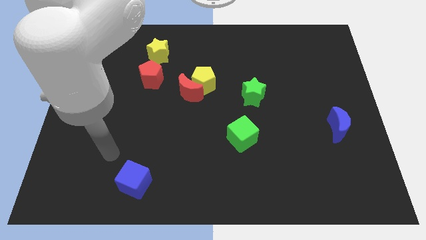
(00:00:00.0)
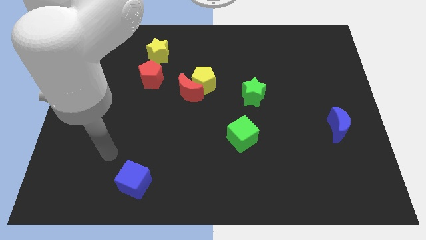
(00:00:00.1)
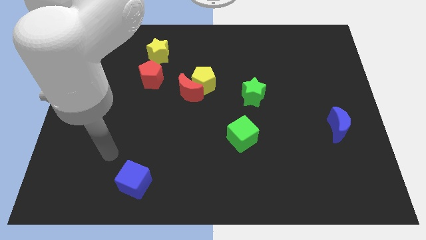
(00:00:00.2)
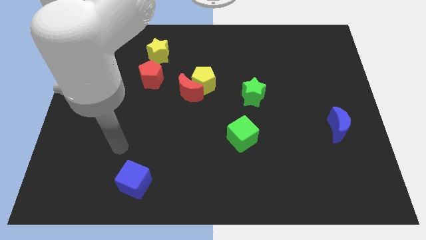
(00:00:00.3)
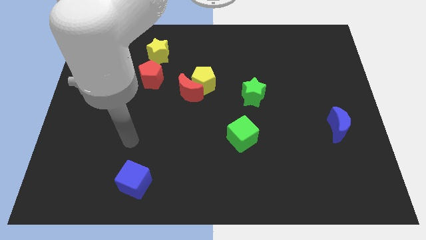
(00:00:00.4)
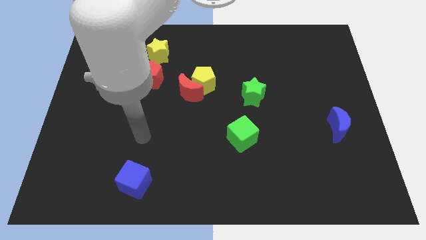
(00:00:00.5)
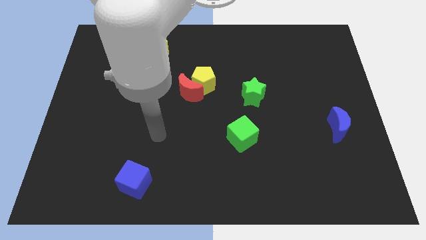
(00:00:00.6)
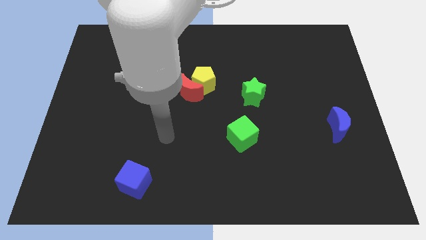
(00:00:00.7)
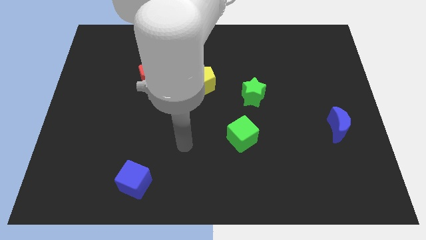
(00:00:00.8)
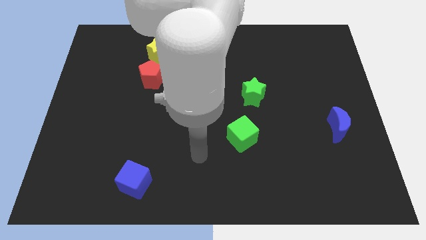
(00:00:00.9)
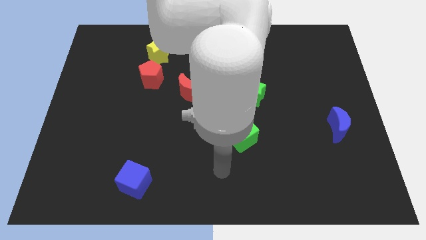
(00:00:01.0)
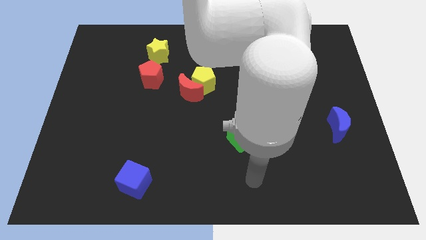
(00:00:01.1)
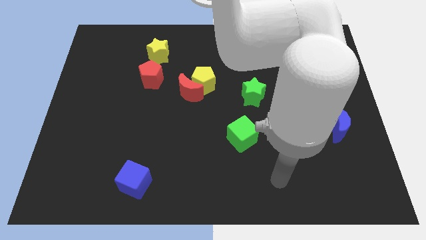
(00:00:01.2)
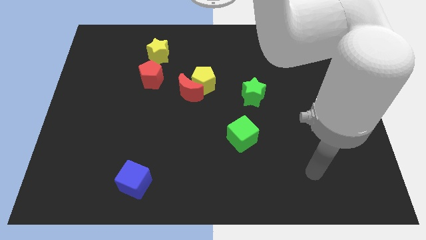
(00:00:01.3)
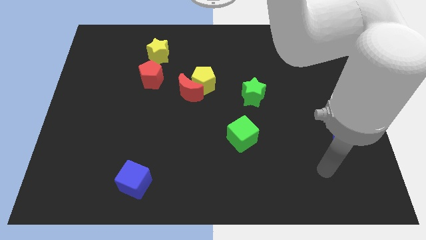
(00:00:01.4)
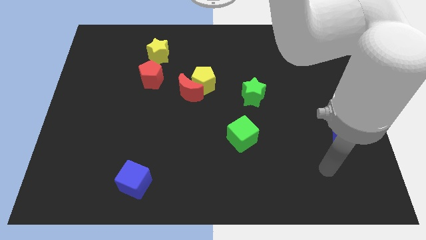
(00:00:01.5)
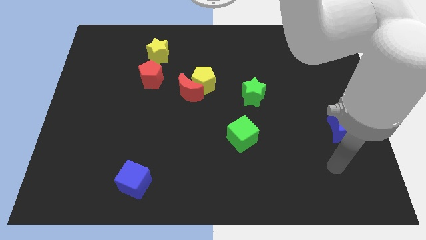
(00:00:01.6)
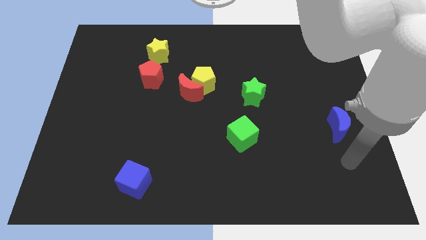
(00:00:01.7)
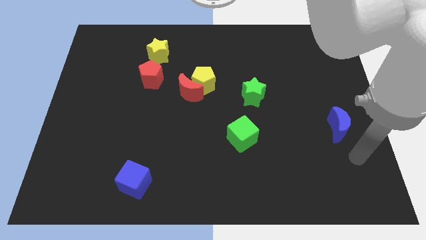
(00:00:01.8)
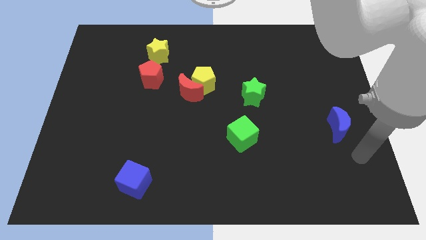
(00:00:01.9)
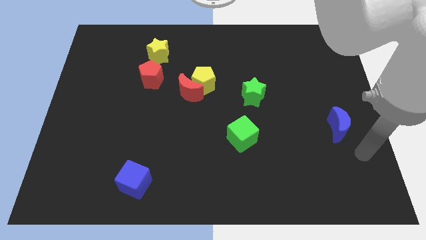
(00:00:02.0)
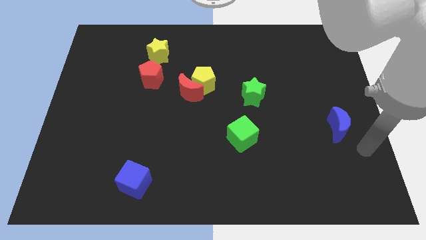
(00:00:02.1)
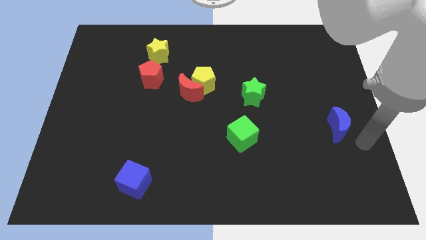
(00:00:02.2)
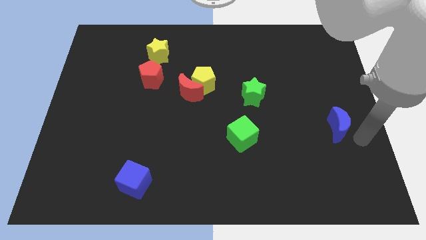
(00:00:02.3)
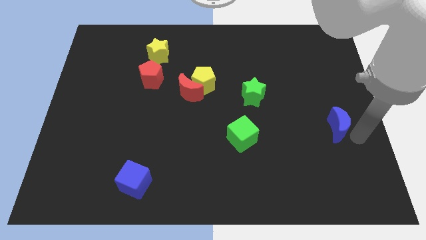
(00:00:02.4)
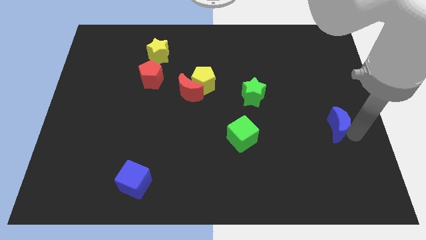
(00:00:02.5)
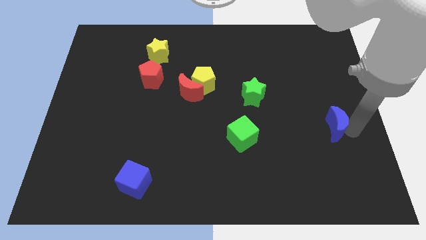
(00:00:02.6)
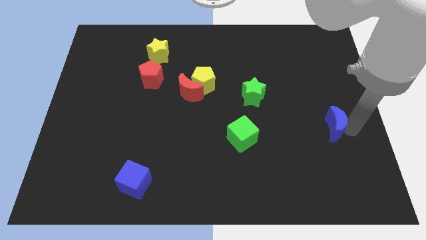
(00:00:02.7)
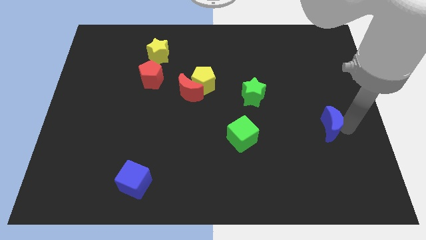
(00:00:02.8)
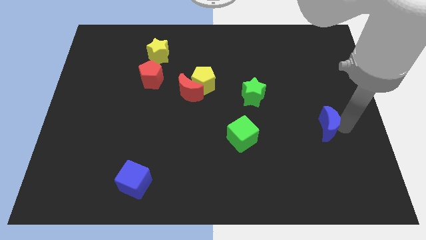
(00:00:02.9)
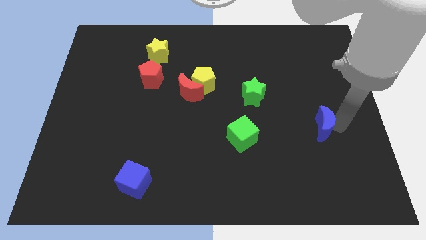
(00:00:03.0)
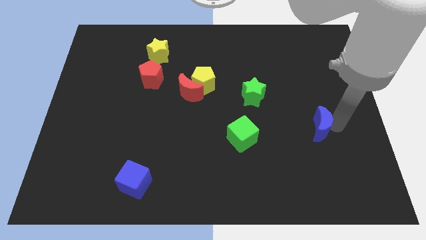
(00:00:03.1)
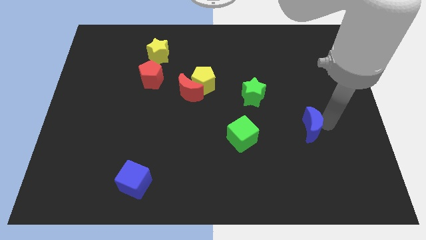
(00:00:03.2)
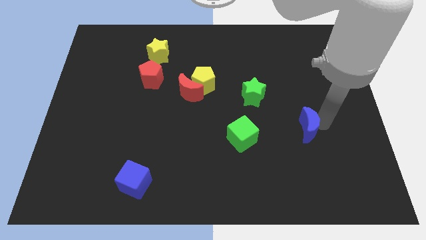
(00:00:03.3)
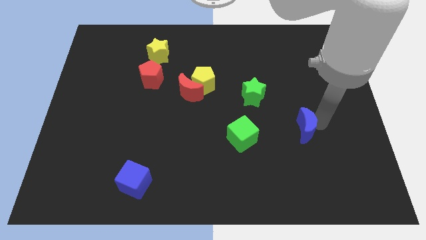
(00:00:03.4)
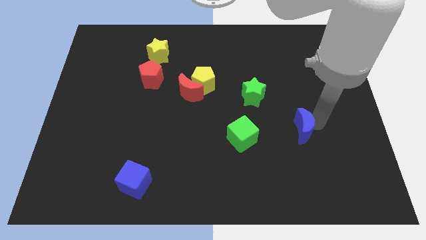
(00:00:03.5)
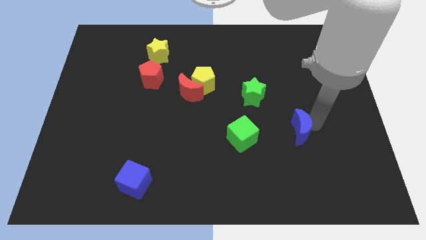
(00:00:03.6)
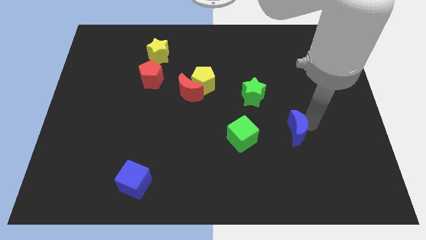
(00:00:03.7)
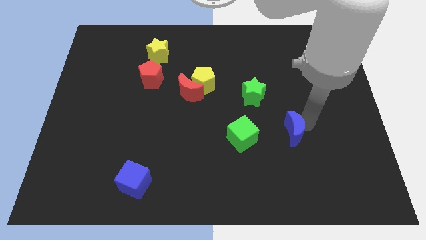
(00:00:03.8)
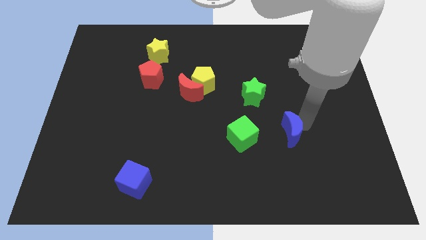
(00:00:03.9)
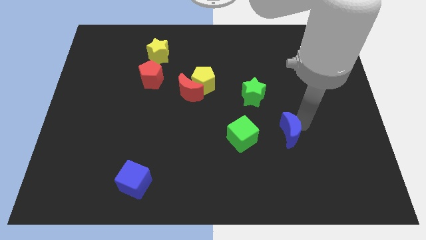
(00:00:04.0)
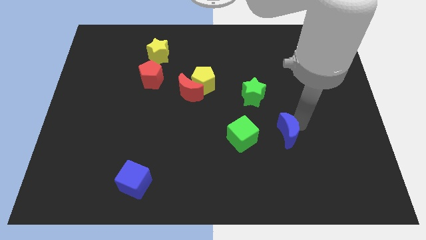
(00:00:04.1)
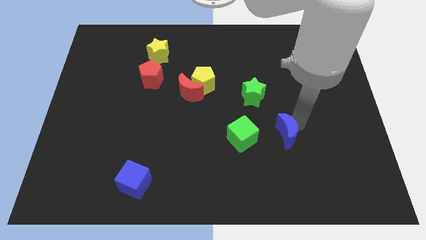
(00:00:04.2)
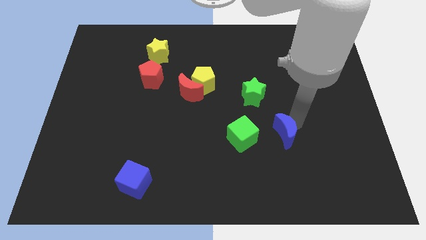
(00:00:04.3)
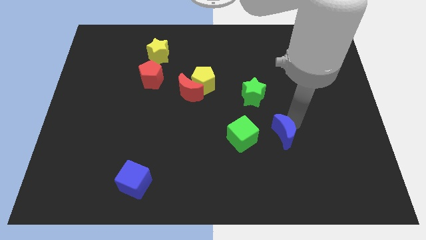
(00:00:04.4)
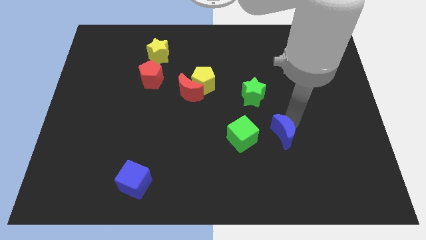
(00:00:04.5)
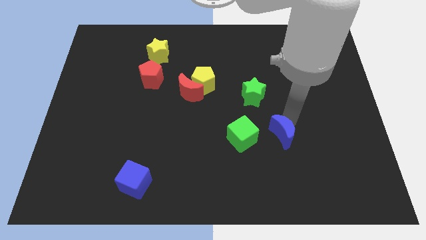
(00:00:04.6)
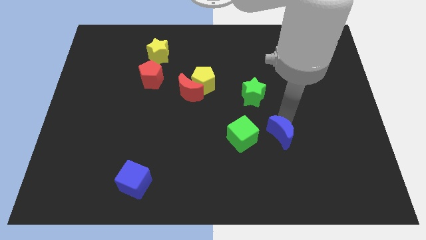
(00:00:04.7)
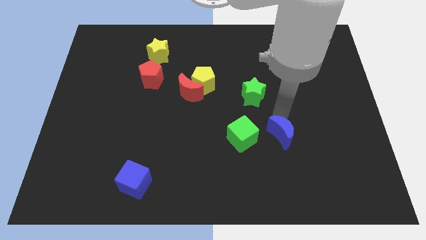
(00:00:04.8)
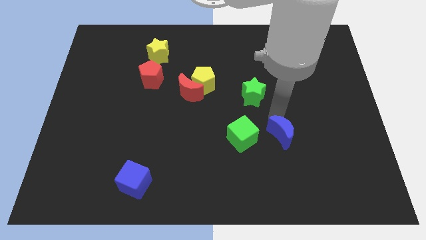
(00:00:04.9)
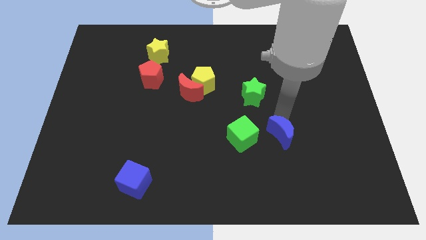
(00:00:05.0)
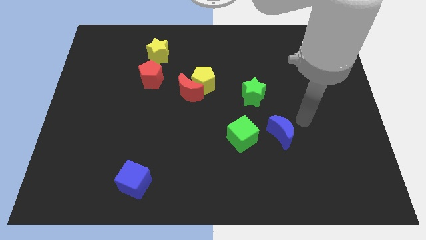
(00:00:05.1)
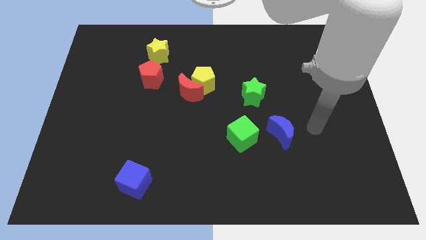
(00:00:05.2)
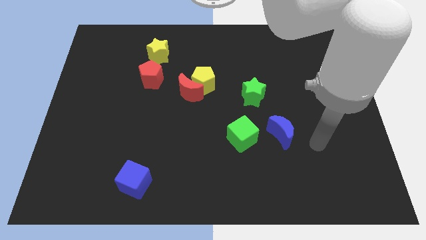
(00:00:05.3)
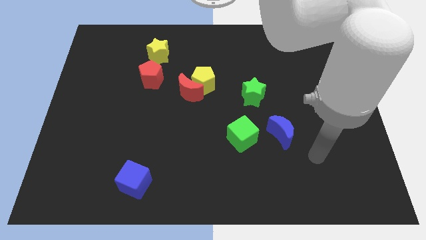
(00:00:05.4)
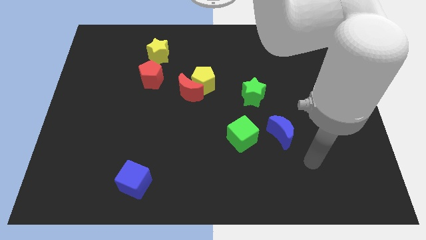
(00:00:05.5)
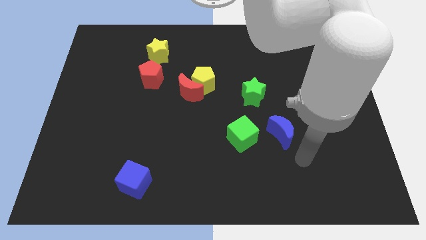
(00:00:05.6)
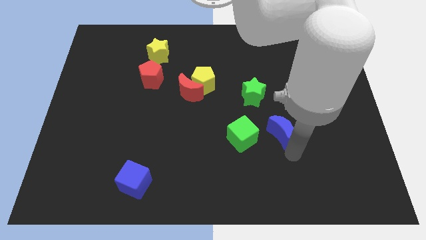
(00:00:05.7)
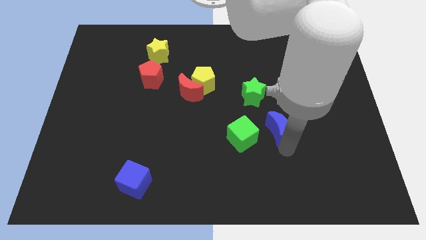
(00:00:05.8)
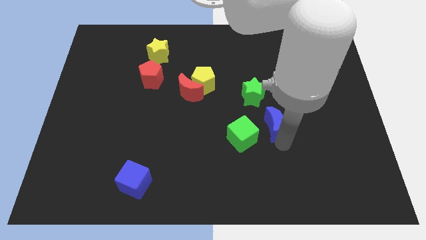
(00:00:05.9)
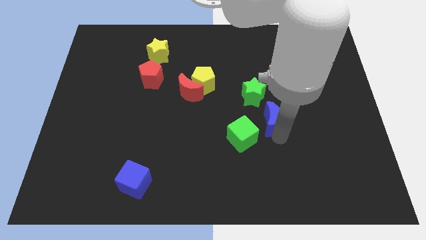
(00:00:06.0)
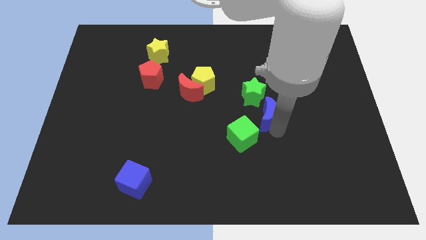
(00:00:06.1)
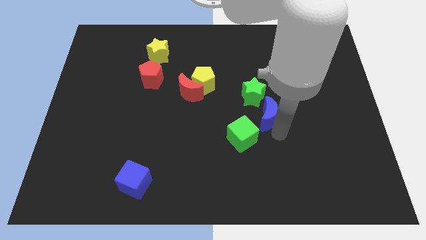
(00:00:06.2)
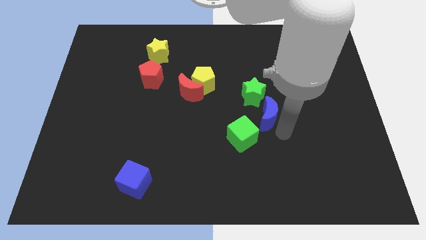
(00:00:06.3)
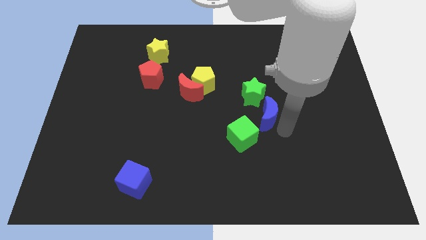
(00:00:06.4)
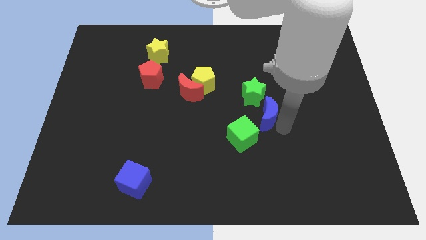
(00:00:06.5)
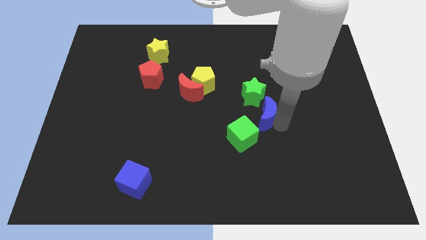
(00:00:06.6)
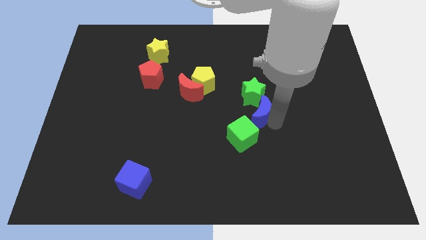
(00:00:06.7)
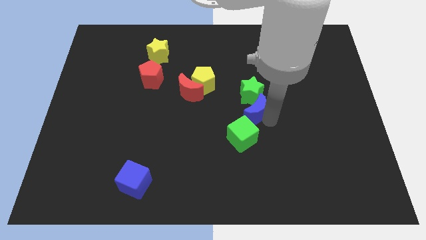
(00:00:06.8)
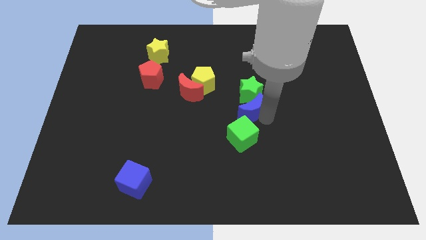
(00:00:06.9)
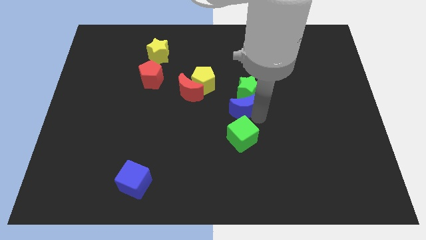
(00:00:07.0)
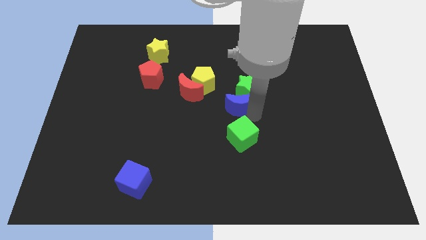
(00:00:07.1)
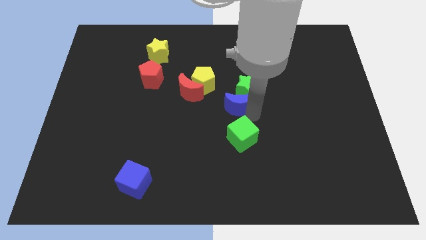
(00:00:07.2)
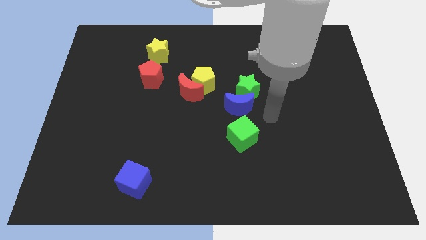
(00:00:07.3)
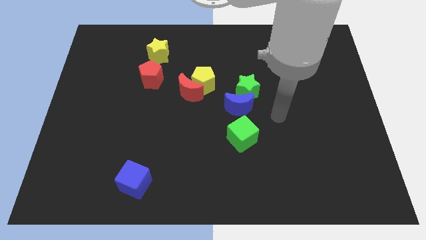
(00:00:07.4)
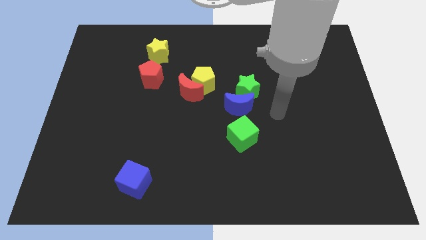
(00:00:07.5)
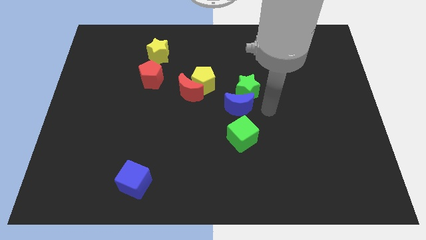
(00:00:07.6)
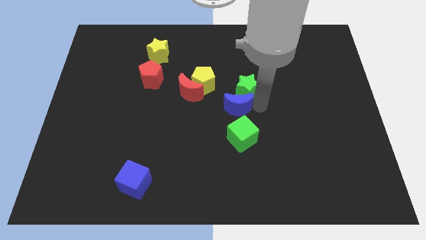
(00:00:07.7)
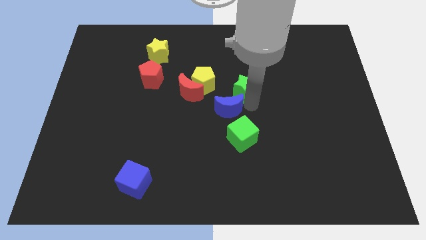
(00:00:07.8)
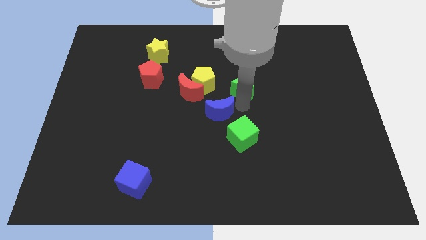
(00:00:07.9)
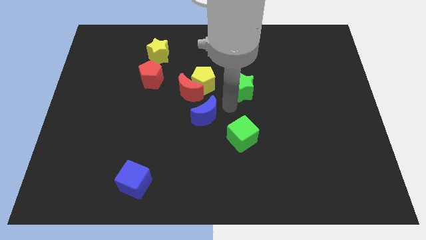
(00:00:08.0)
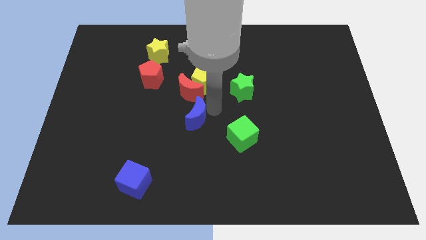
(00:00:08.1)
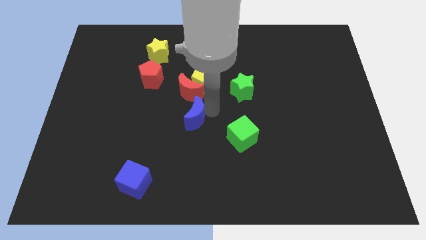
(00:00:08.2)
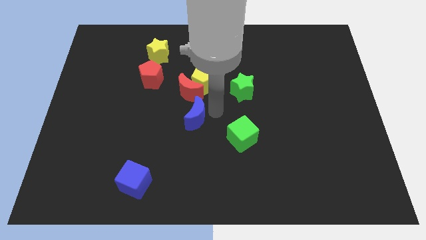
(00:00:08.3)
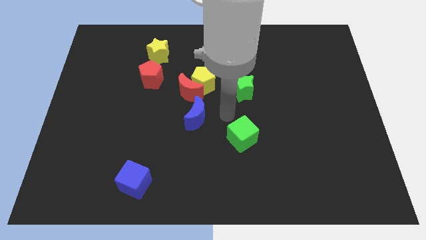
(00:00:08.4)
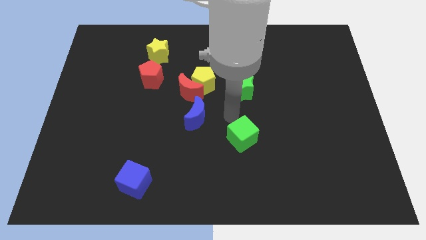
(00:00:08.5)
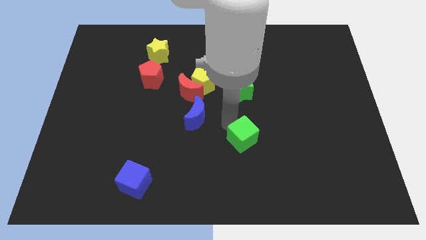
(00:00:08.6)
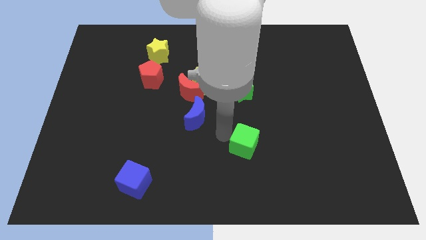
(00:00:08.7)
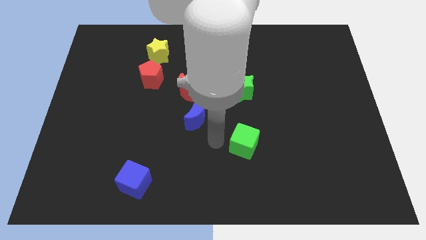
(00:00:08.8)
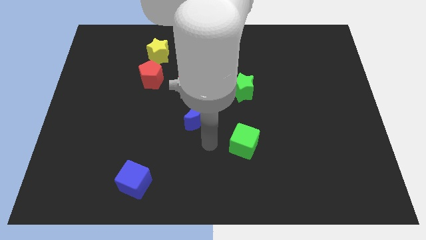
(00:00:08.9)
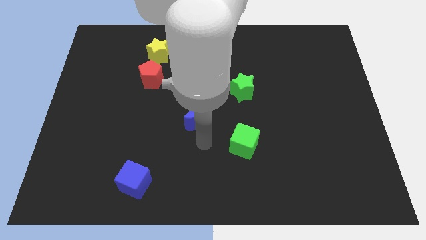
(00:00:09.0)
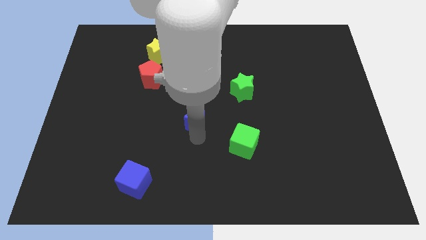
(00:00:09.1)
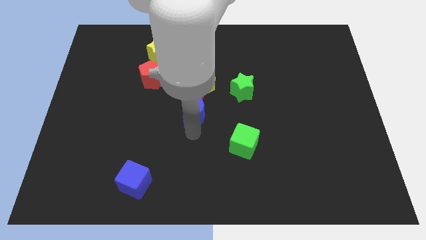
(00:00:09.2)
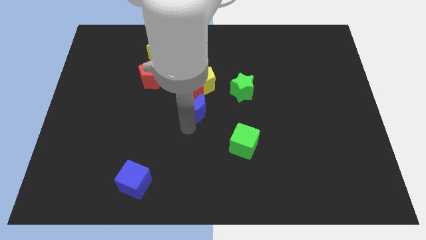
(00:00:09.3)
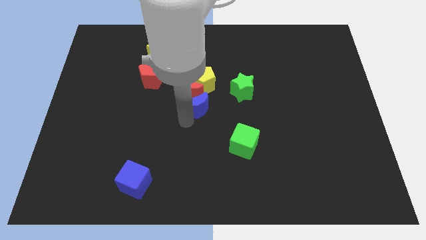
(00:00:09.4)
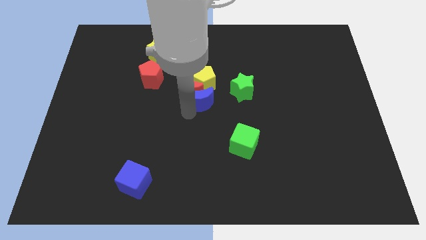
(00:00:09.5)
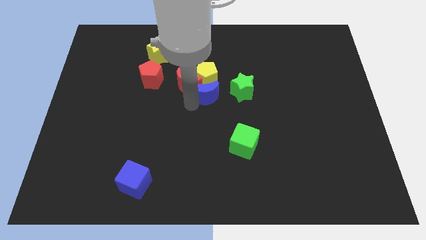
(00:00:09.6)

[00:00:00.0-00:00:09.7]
push the blue moon close to the red moon
